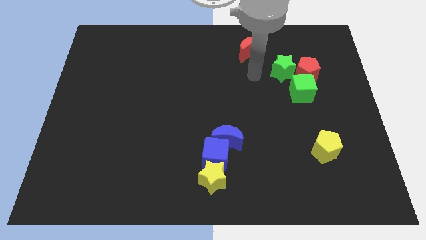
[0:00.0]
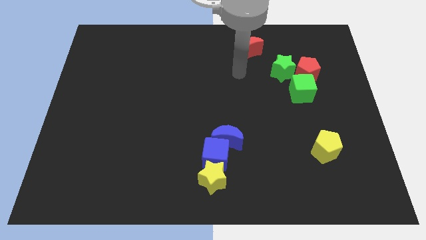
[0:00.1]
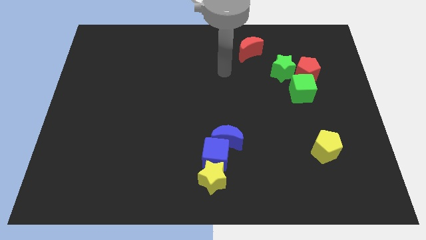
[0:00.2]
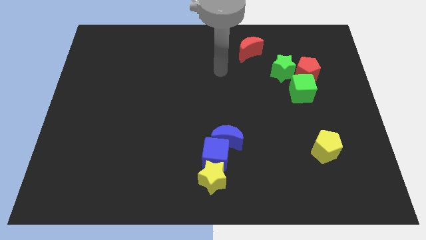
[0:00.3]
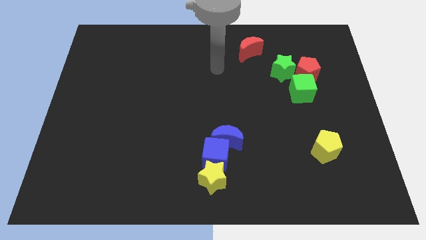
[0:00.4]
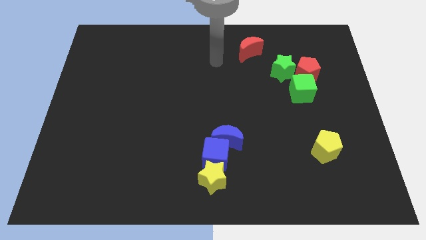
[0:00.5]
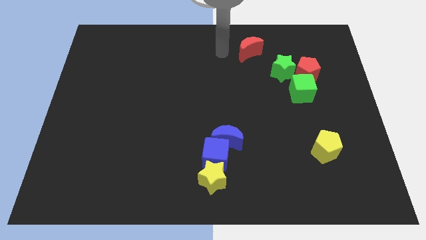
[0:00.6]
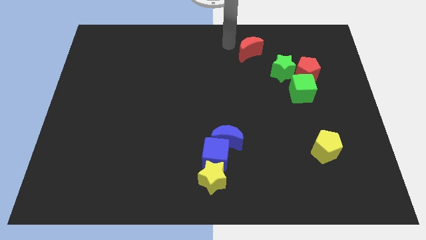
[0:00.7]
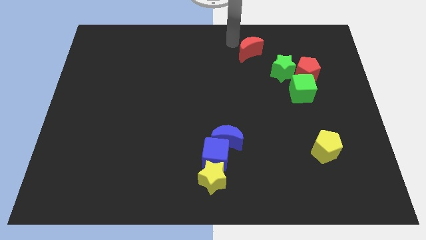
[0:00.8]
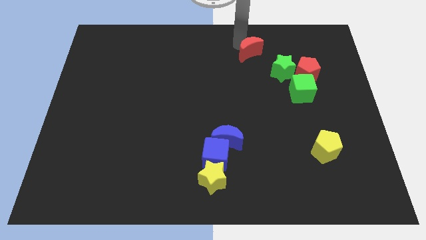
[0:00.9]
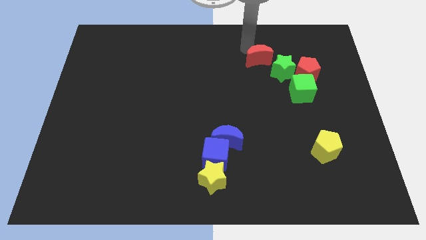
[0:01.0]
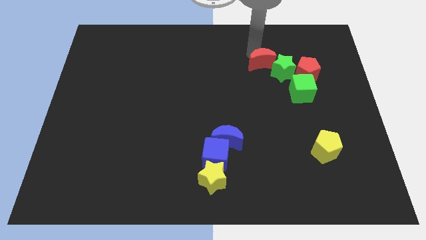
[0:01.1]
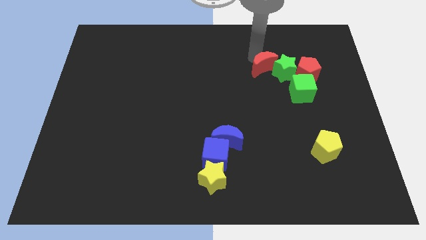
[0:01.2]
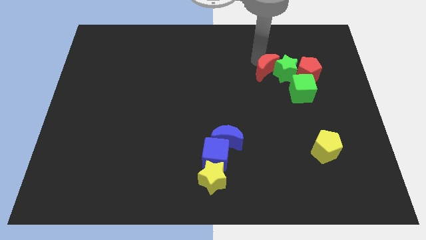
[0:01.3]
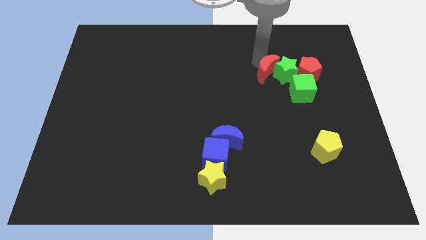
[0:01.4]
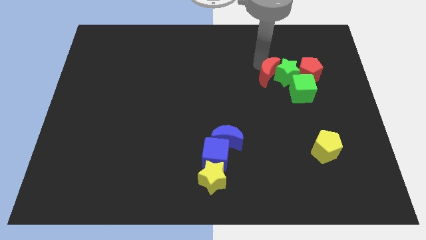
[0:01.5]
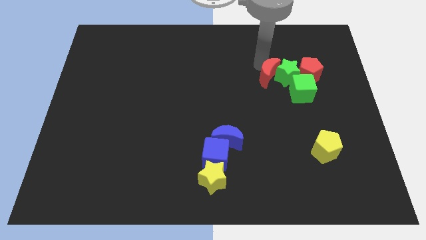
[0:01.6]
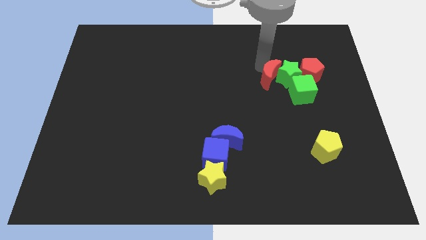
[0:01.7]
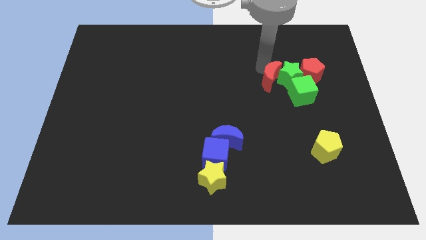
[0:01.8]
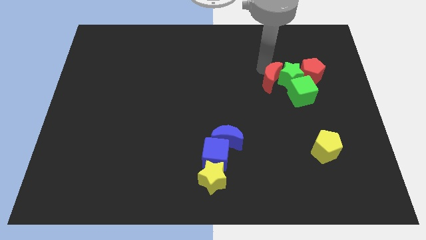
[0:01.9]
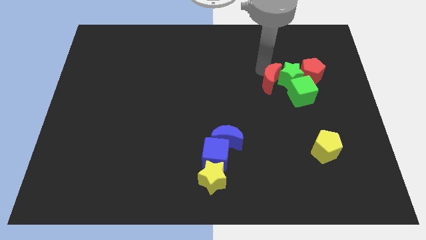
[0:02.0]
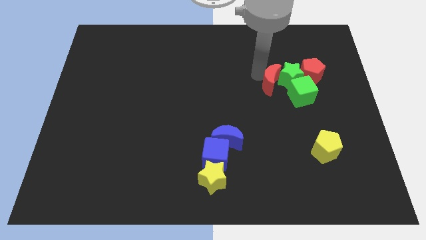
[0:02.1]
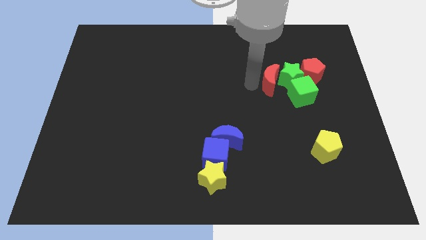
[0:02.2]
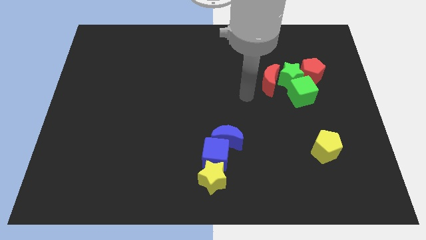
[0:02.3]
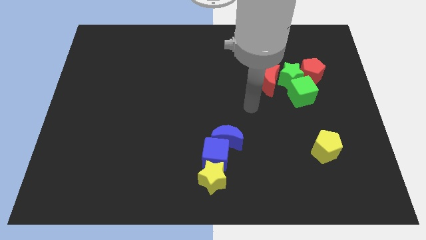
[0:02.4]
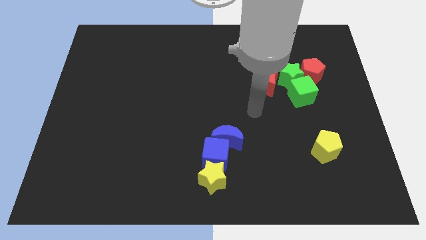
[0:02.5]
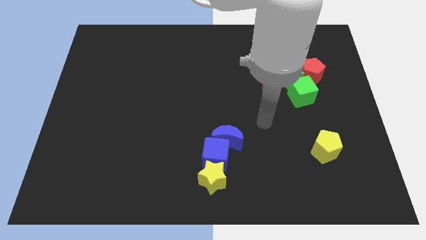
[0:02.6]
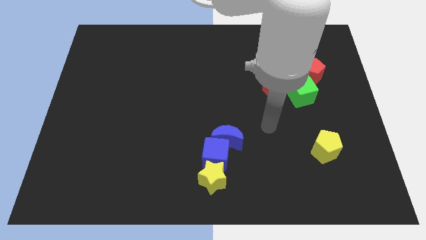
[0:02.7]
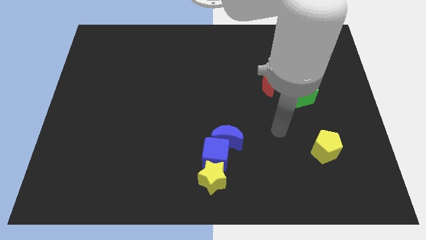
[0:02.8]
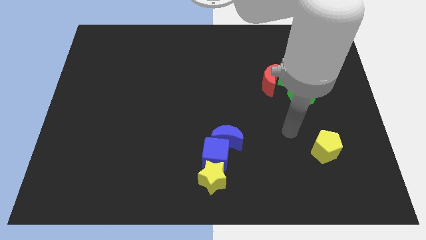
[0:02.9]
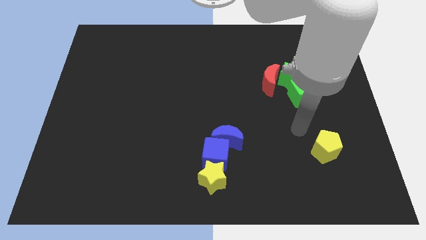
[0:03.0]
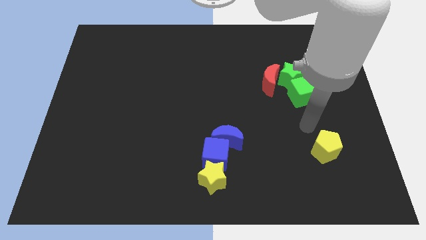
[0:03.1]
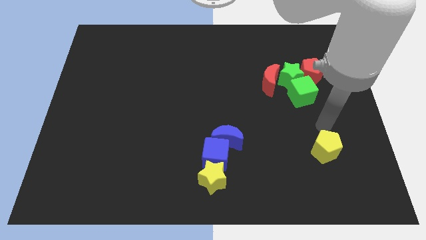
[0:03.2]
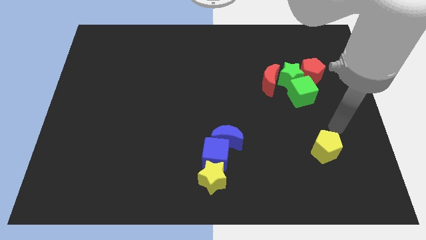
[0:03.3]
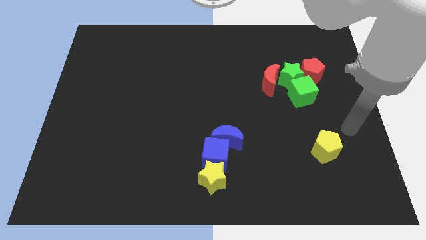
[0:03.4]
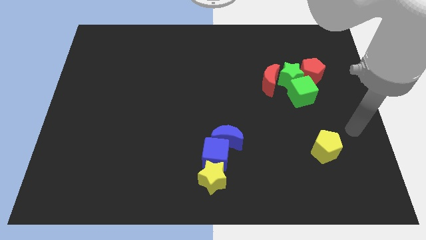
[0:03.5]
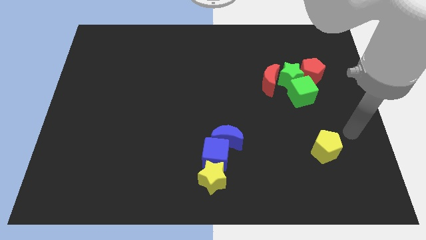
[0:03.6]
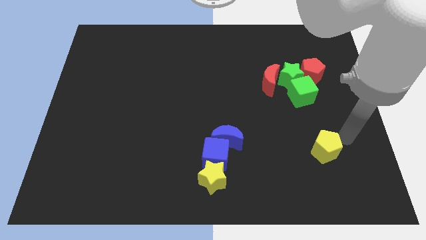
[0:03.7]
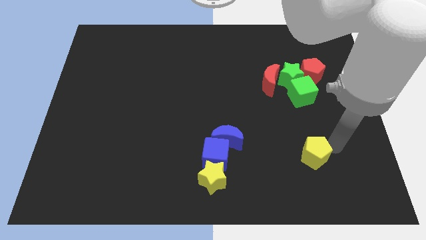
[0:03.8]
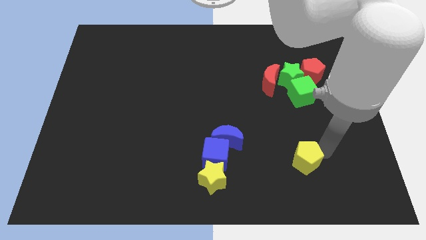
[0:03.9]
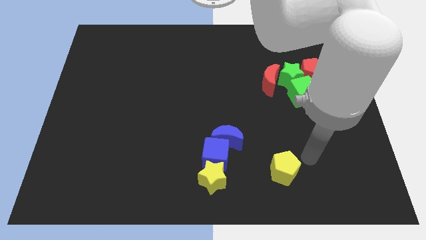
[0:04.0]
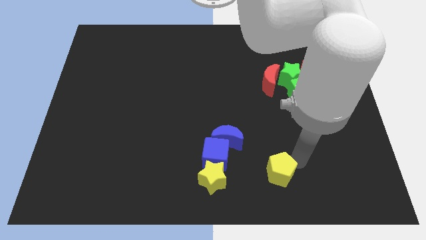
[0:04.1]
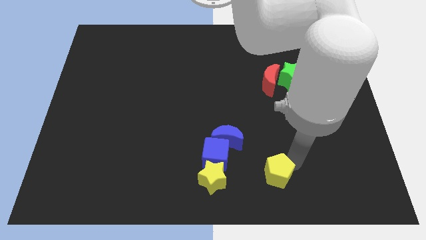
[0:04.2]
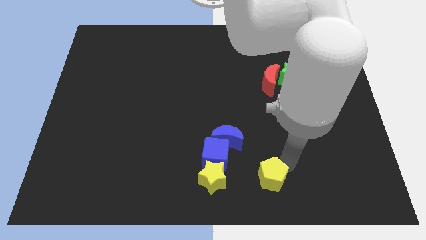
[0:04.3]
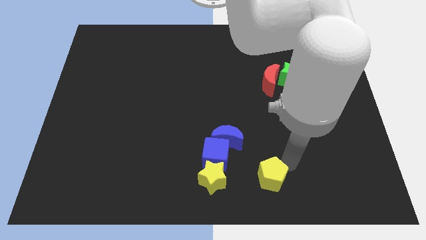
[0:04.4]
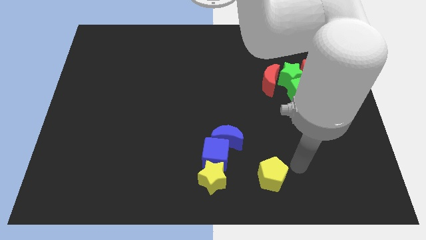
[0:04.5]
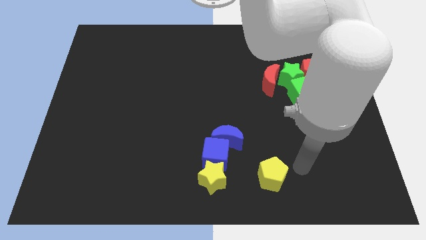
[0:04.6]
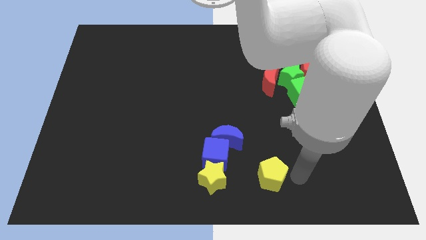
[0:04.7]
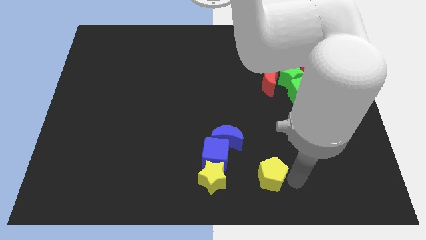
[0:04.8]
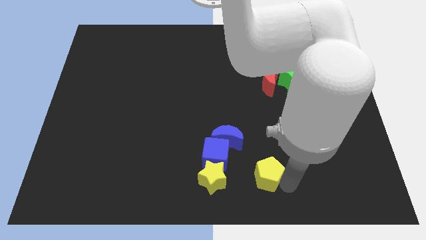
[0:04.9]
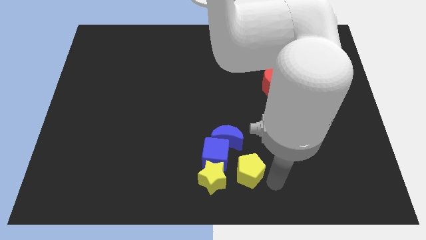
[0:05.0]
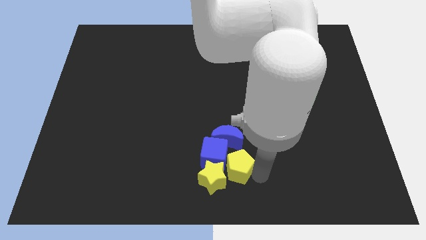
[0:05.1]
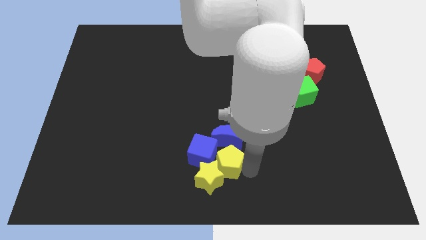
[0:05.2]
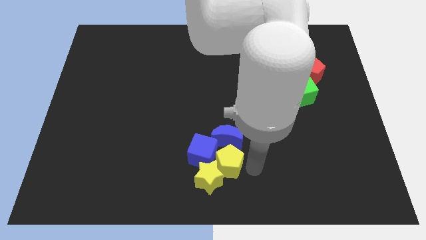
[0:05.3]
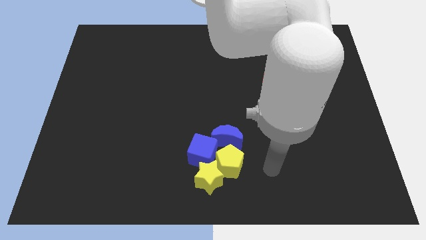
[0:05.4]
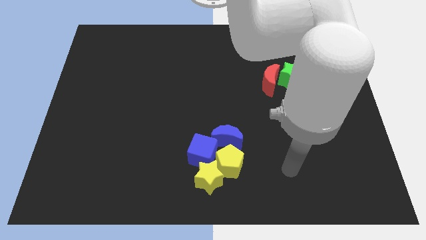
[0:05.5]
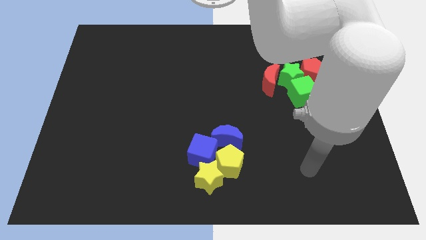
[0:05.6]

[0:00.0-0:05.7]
make a group of blue semi circle blue cube yellow star and yellow pentagon

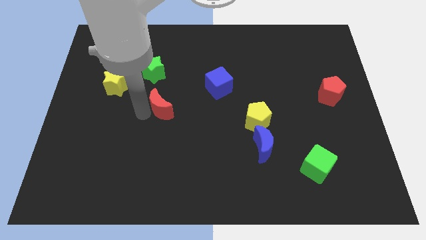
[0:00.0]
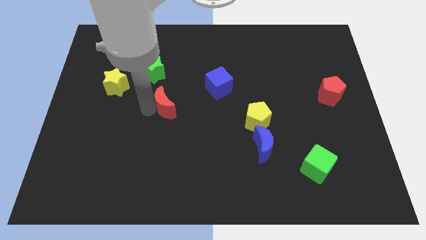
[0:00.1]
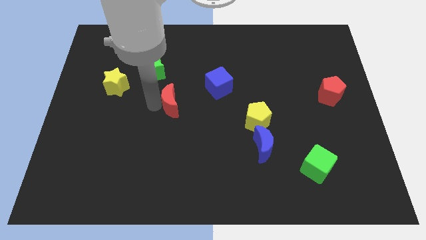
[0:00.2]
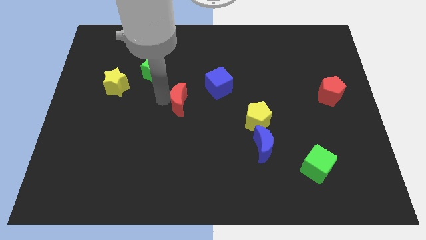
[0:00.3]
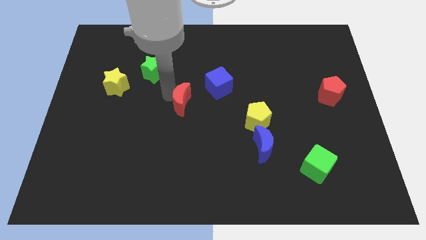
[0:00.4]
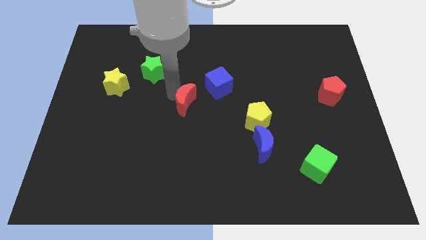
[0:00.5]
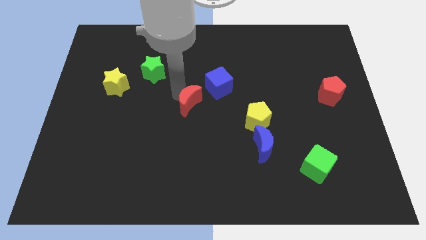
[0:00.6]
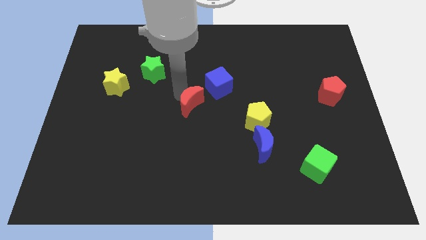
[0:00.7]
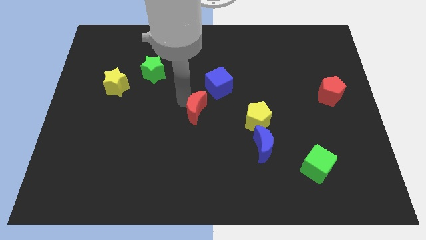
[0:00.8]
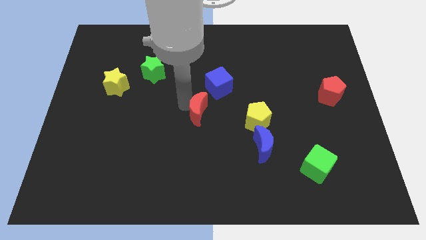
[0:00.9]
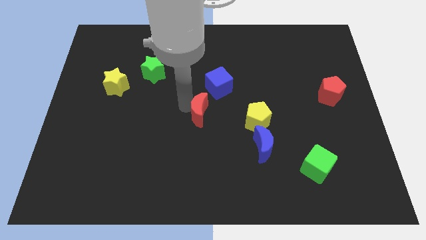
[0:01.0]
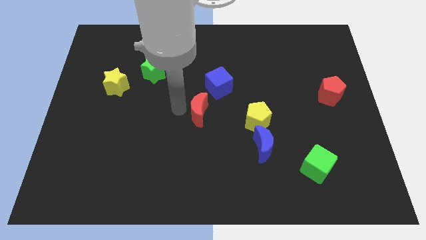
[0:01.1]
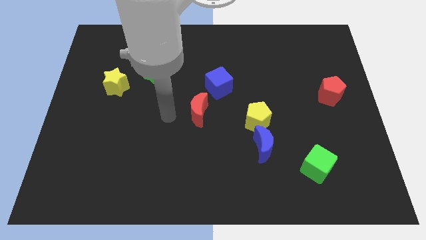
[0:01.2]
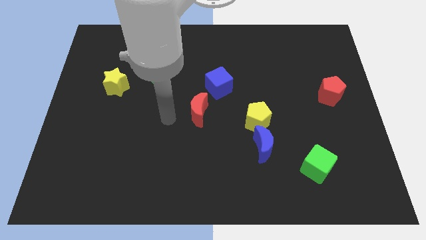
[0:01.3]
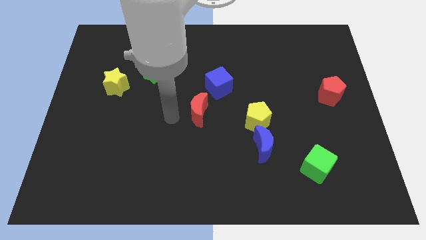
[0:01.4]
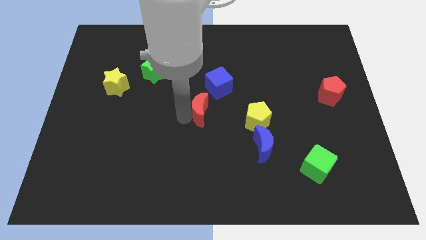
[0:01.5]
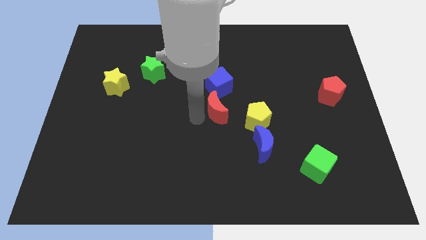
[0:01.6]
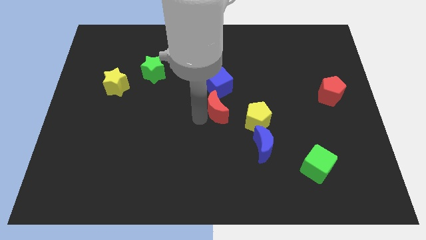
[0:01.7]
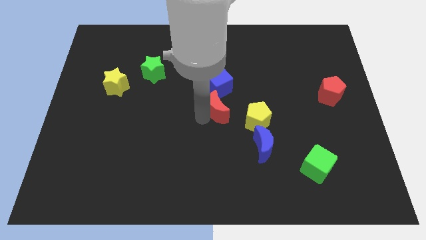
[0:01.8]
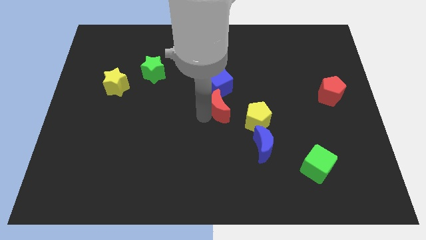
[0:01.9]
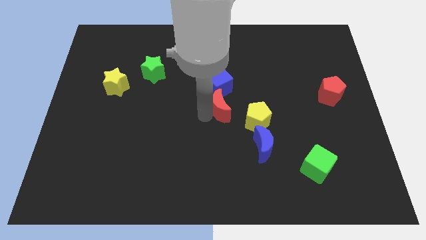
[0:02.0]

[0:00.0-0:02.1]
place the red crescent below the blue cube

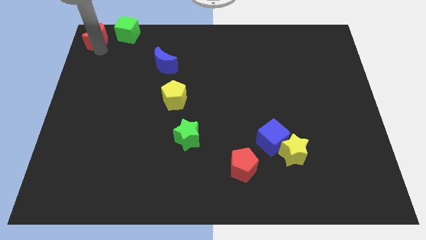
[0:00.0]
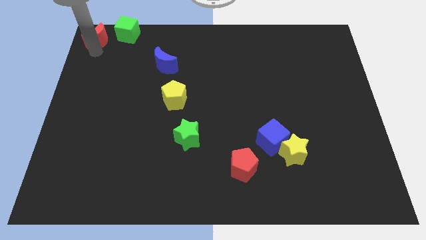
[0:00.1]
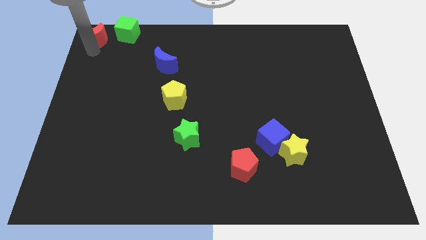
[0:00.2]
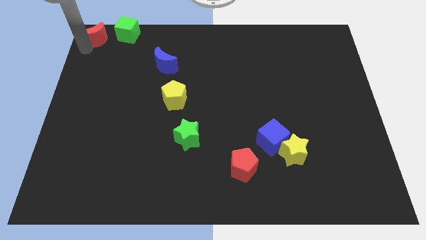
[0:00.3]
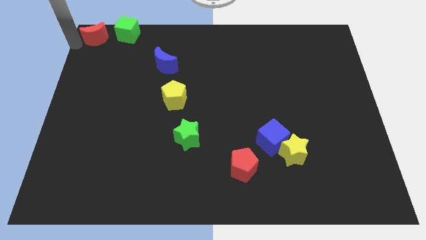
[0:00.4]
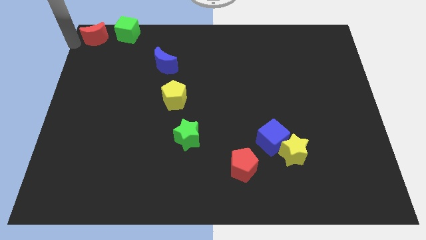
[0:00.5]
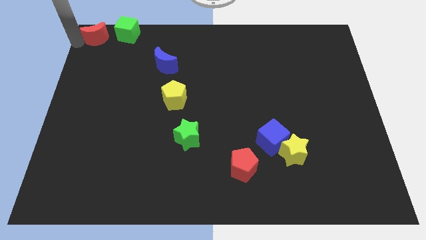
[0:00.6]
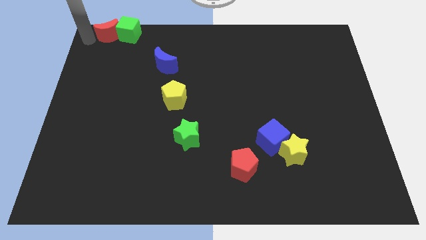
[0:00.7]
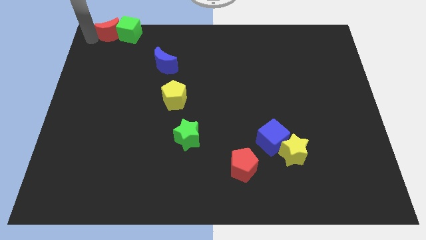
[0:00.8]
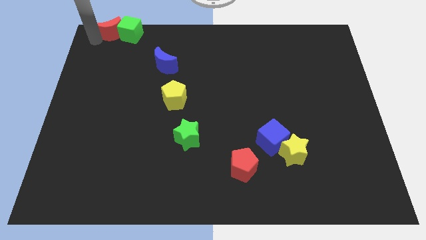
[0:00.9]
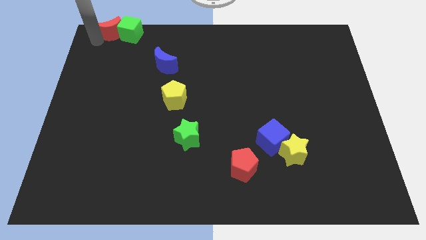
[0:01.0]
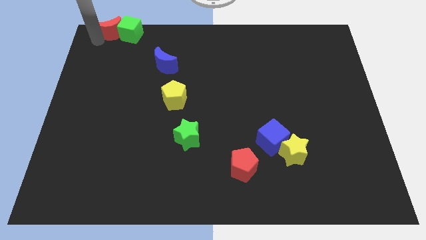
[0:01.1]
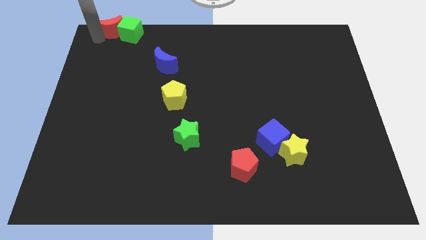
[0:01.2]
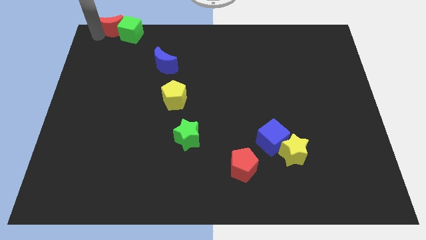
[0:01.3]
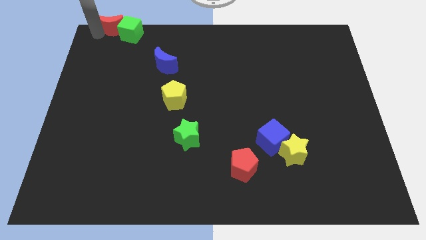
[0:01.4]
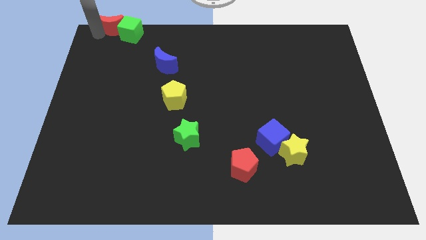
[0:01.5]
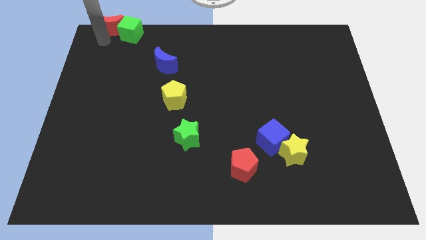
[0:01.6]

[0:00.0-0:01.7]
place the red crescent close left to the green cube
